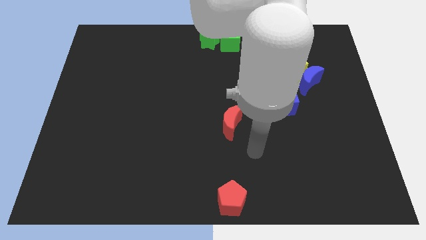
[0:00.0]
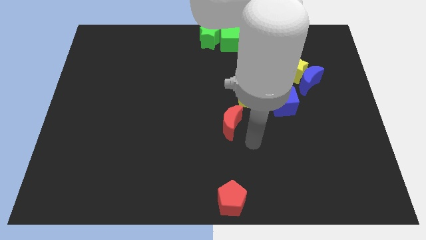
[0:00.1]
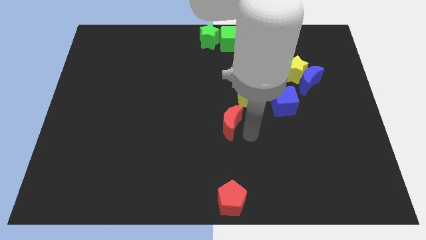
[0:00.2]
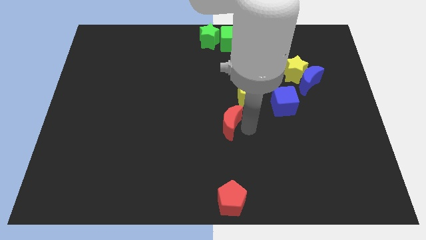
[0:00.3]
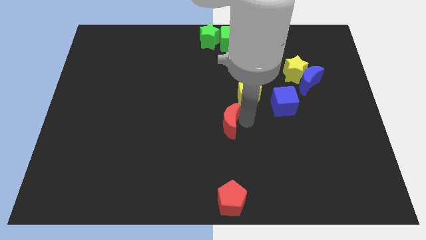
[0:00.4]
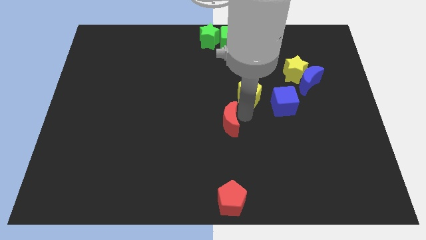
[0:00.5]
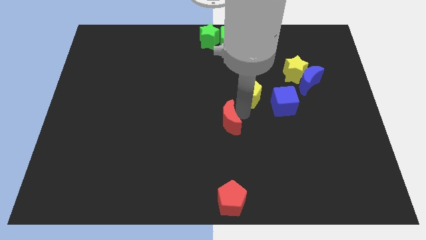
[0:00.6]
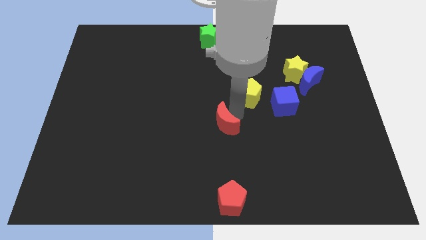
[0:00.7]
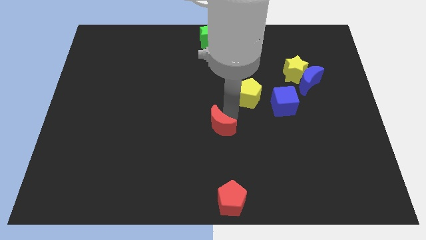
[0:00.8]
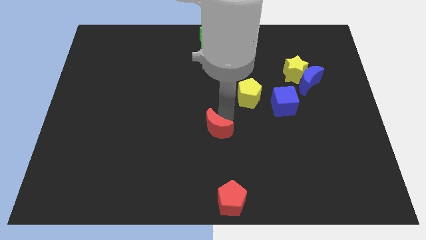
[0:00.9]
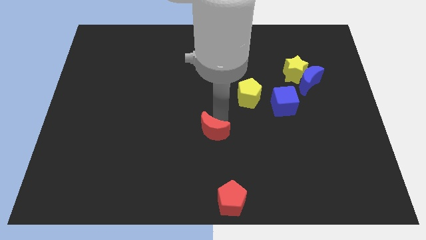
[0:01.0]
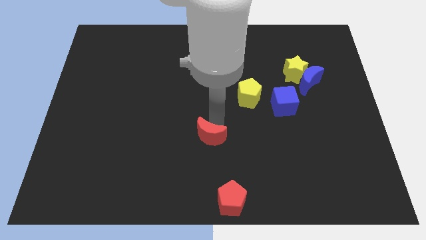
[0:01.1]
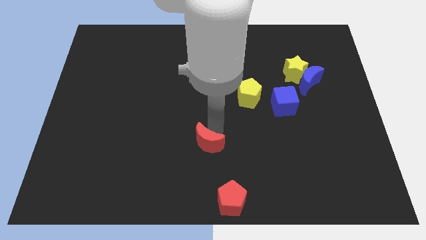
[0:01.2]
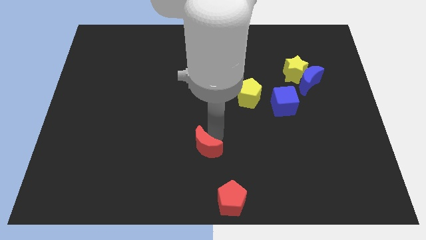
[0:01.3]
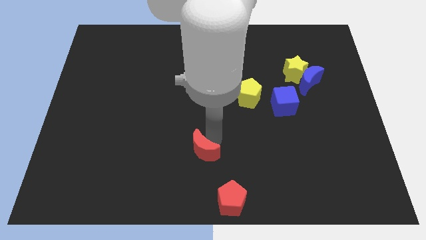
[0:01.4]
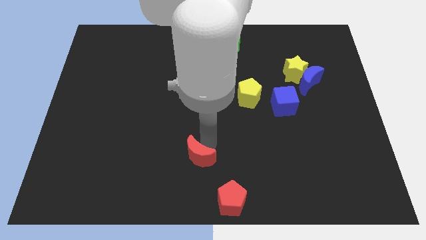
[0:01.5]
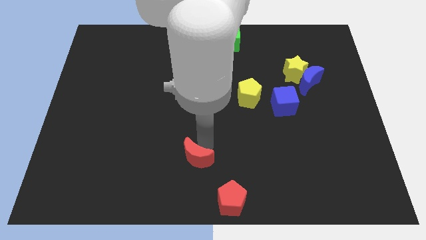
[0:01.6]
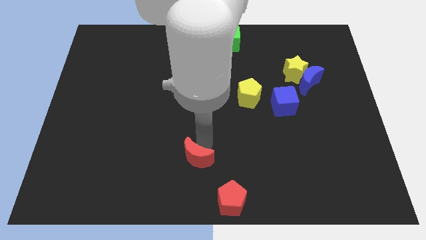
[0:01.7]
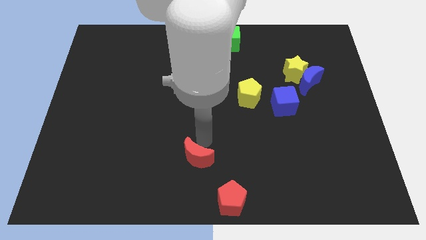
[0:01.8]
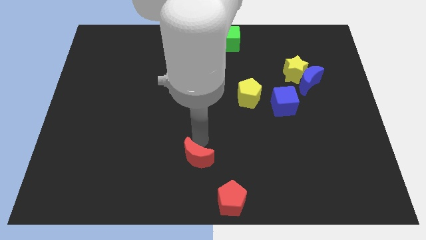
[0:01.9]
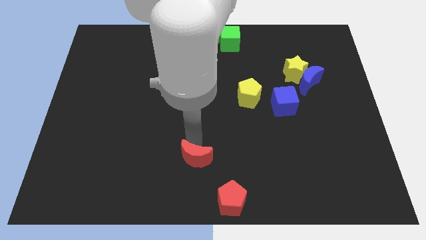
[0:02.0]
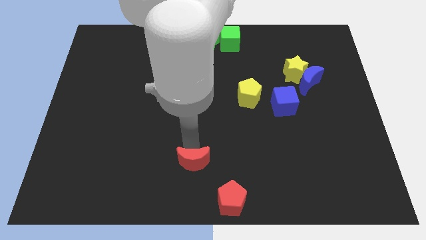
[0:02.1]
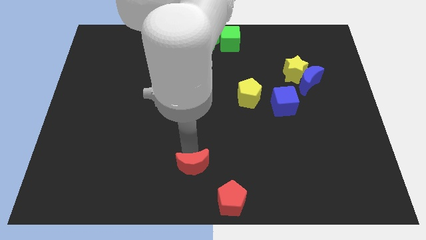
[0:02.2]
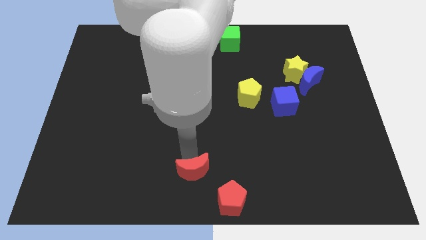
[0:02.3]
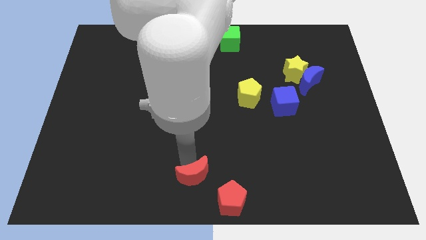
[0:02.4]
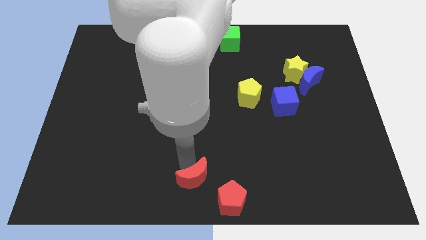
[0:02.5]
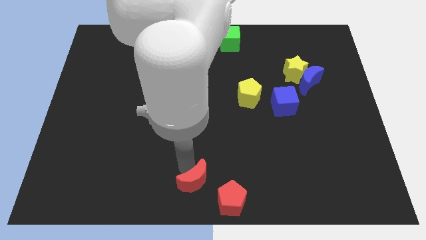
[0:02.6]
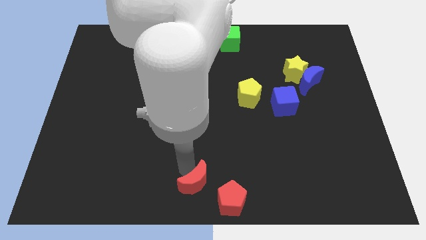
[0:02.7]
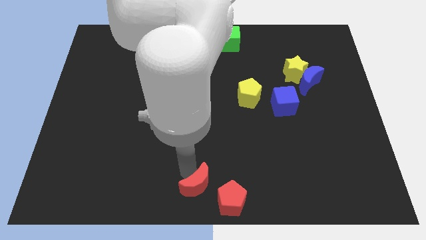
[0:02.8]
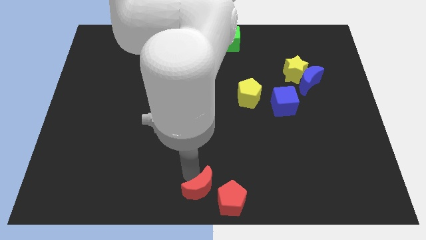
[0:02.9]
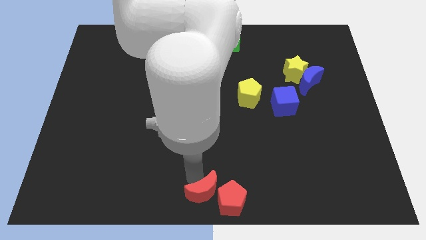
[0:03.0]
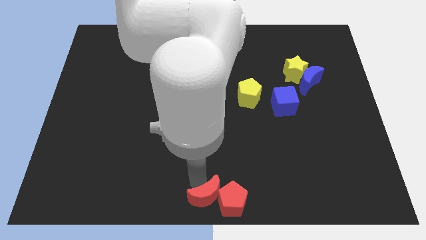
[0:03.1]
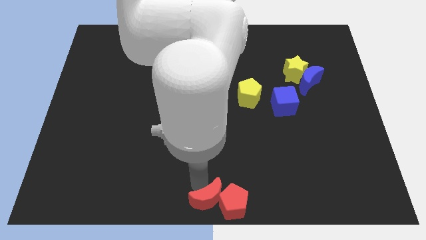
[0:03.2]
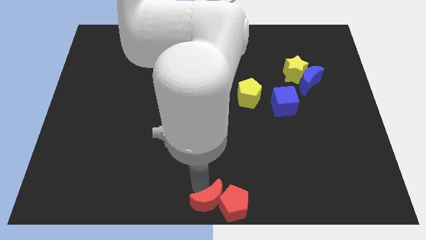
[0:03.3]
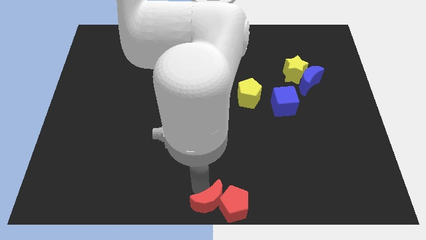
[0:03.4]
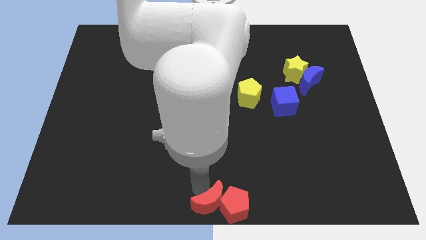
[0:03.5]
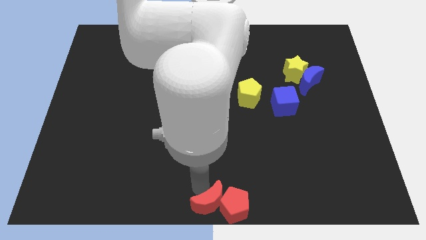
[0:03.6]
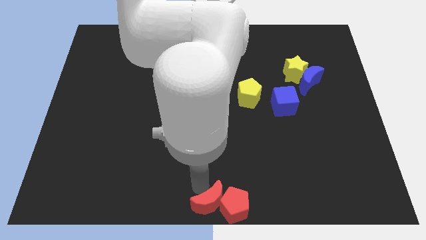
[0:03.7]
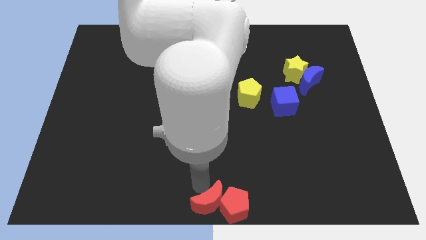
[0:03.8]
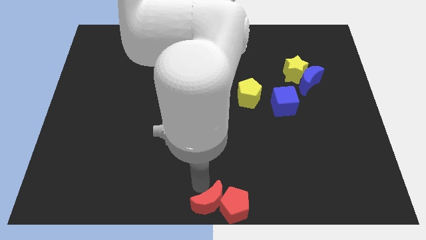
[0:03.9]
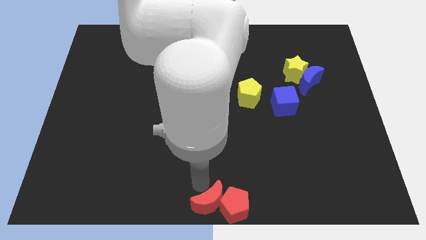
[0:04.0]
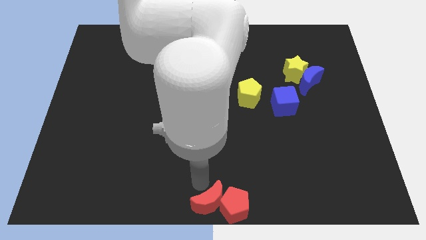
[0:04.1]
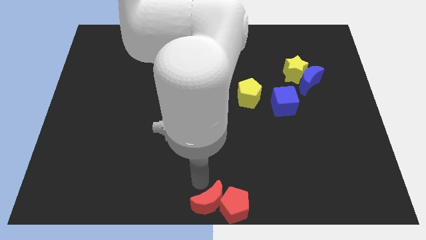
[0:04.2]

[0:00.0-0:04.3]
move red moon to left of the red pentagon

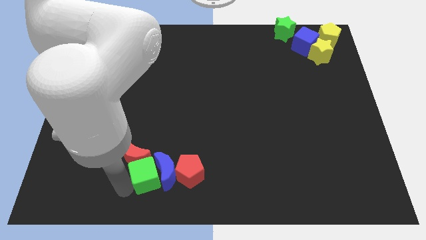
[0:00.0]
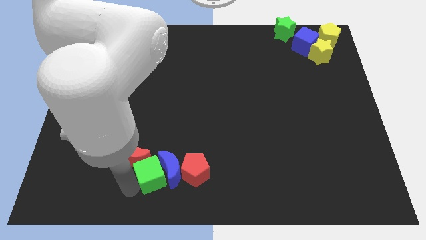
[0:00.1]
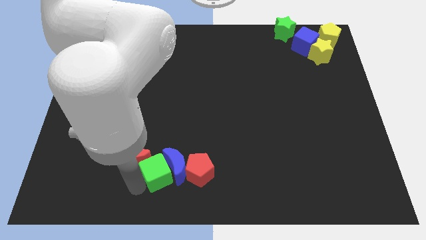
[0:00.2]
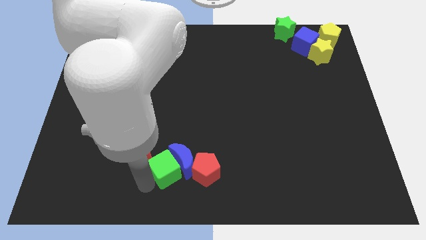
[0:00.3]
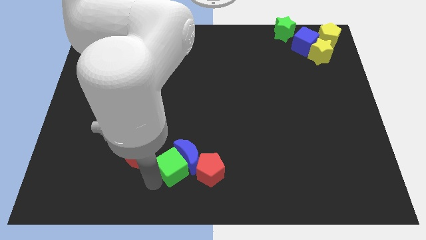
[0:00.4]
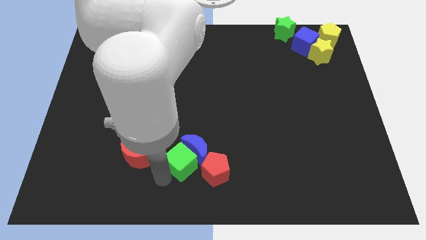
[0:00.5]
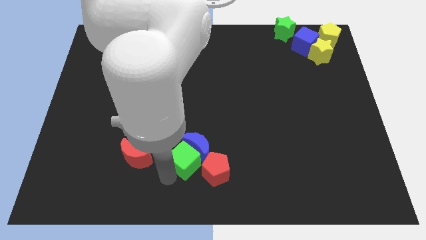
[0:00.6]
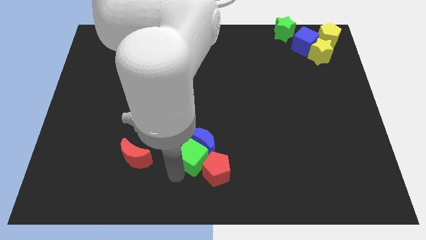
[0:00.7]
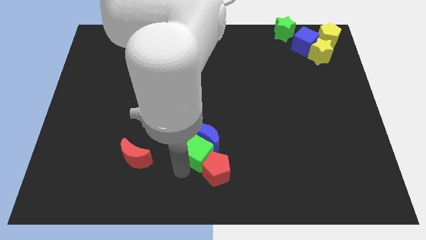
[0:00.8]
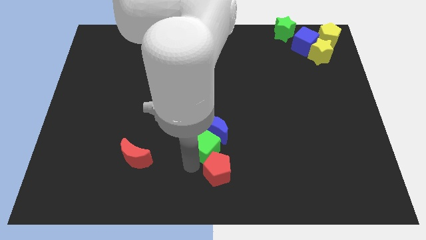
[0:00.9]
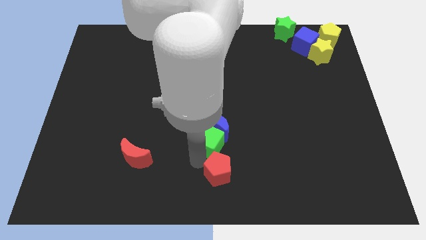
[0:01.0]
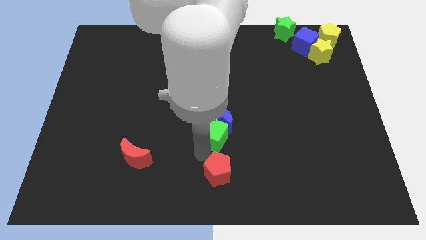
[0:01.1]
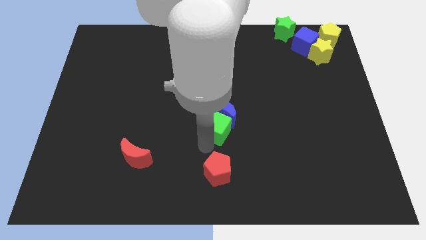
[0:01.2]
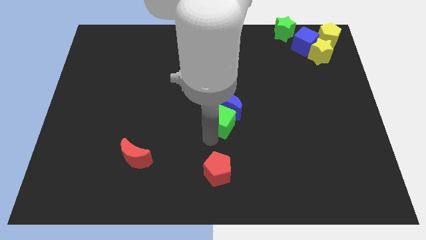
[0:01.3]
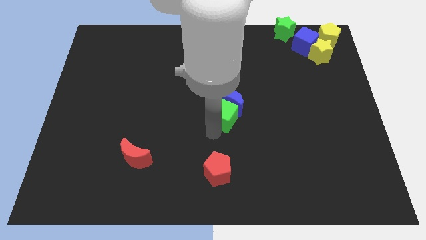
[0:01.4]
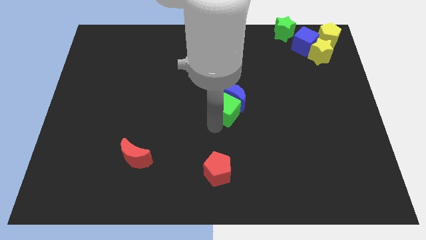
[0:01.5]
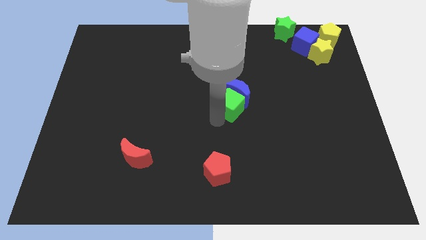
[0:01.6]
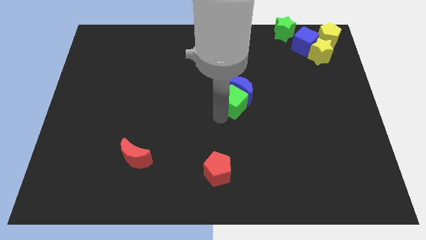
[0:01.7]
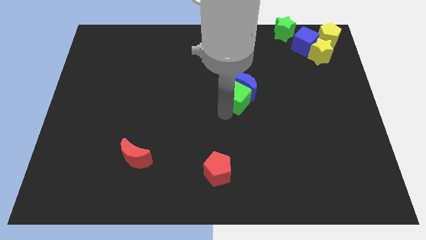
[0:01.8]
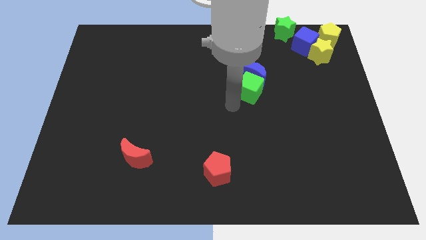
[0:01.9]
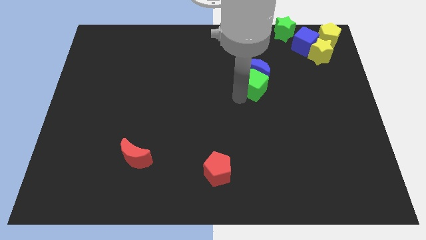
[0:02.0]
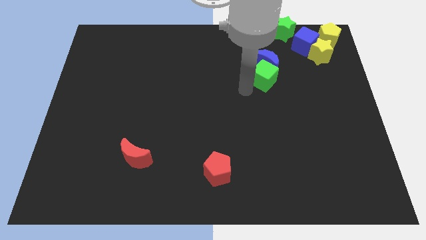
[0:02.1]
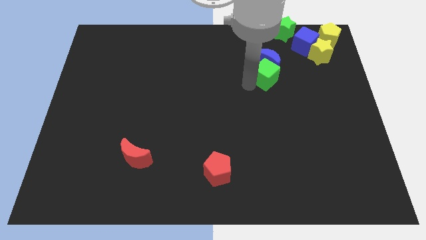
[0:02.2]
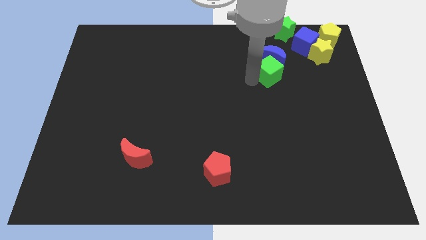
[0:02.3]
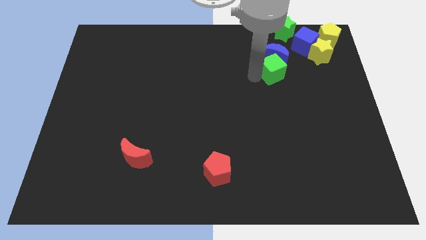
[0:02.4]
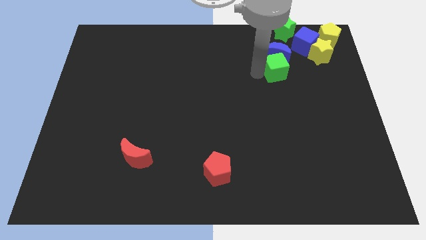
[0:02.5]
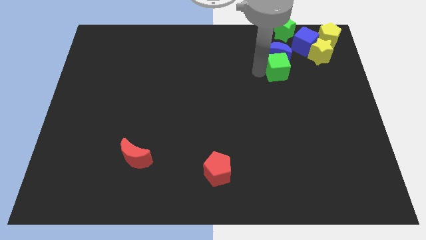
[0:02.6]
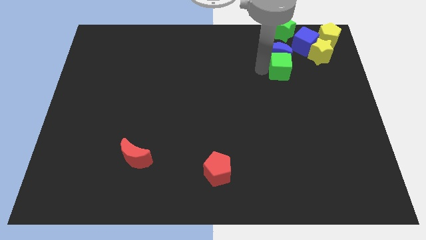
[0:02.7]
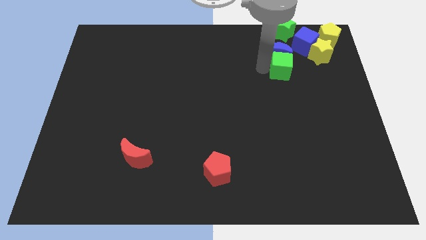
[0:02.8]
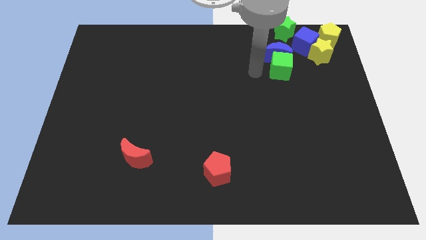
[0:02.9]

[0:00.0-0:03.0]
move green cube along with blue crescent towards the group of blocks

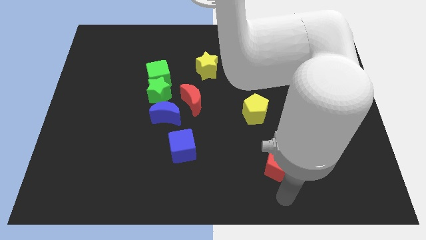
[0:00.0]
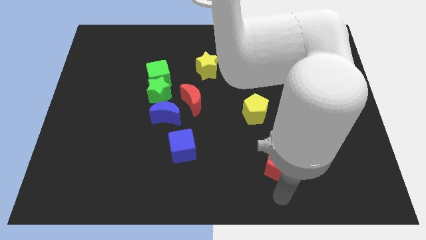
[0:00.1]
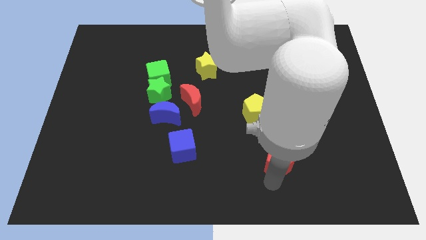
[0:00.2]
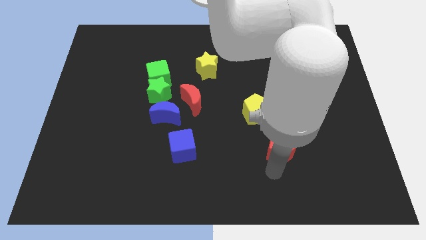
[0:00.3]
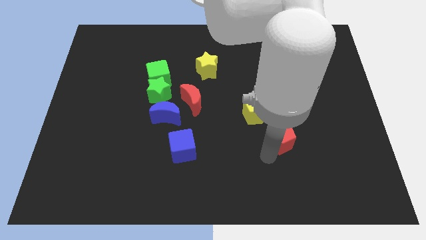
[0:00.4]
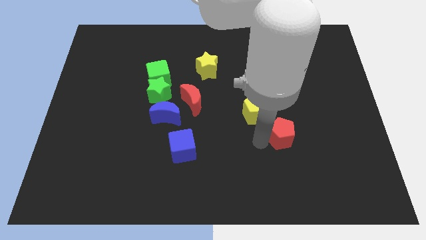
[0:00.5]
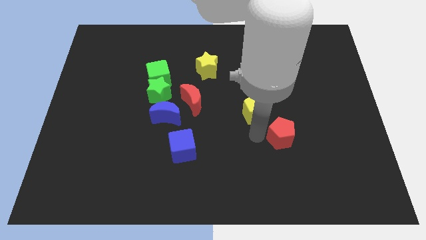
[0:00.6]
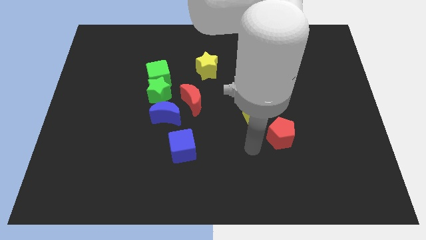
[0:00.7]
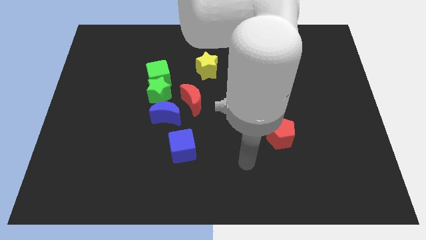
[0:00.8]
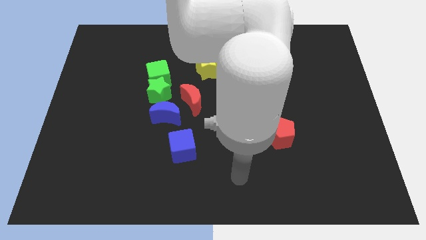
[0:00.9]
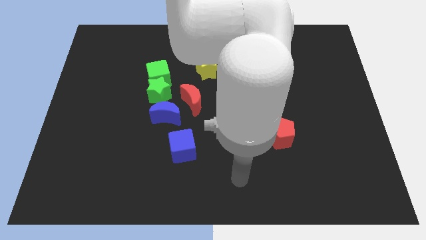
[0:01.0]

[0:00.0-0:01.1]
move the red pentagon near the yellow pentagon

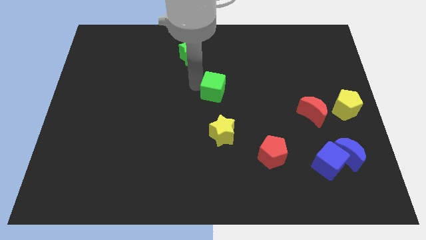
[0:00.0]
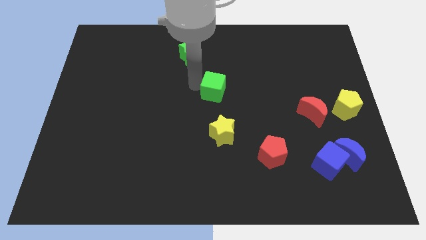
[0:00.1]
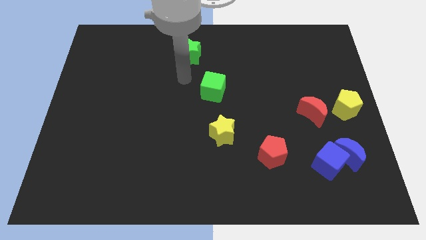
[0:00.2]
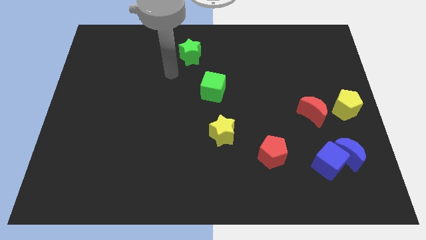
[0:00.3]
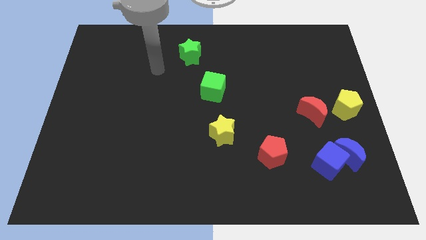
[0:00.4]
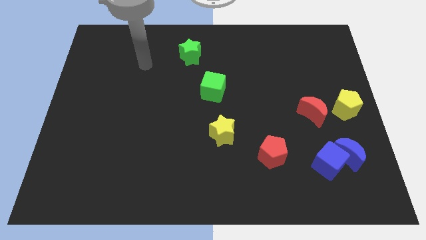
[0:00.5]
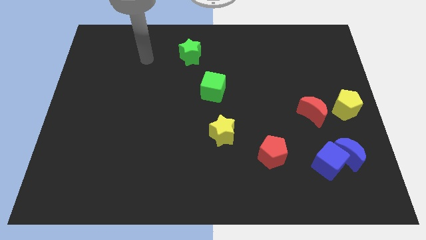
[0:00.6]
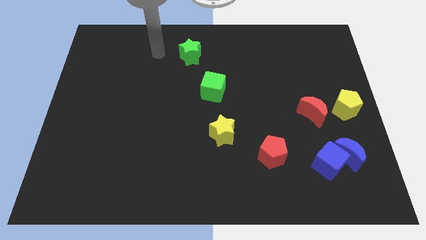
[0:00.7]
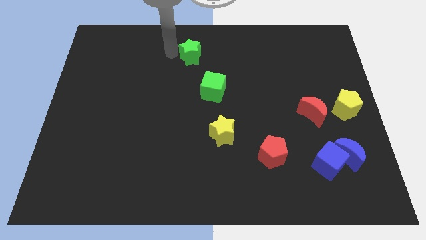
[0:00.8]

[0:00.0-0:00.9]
move your arm to the green star
